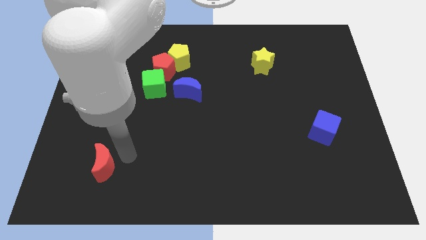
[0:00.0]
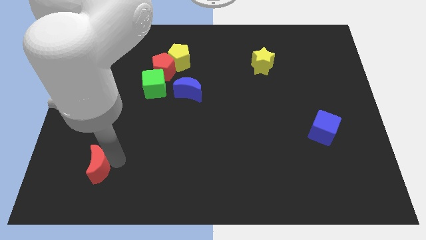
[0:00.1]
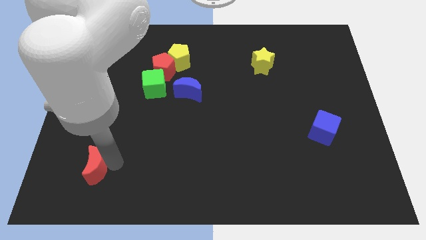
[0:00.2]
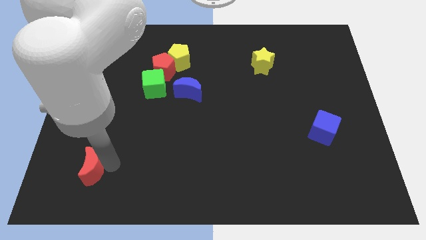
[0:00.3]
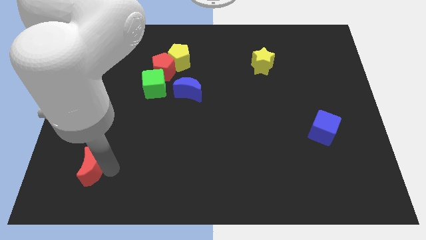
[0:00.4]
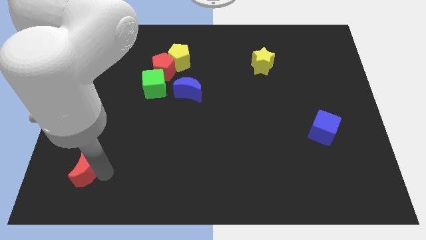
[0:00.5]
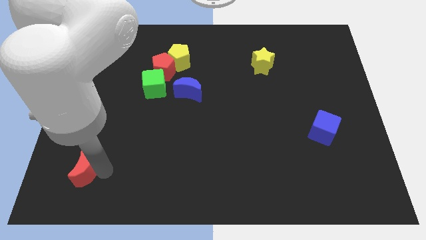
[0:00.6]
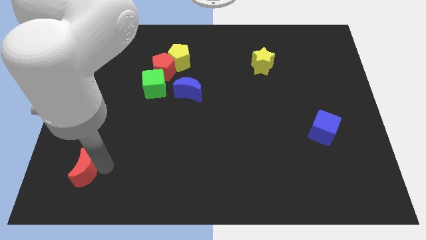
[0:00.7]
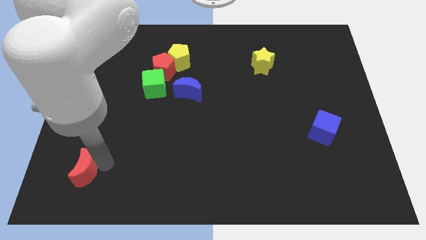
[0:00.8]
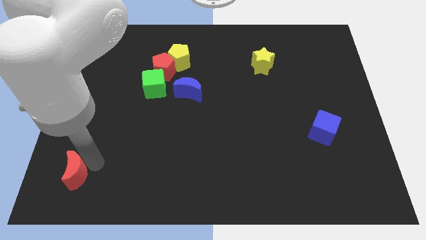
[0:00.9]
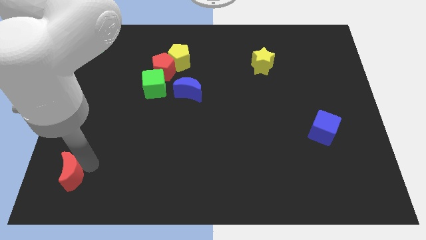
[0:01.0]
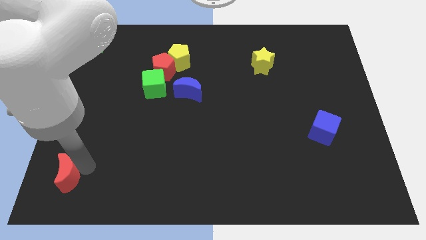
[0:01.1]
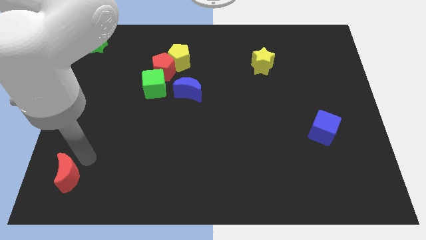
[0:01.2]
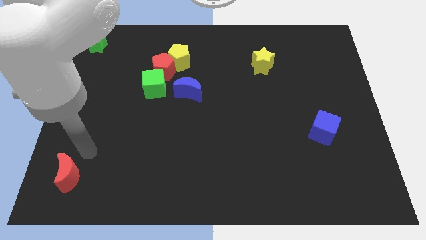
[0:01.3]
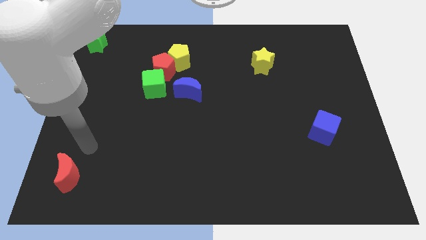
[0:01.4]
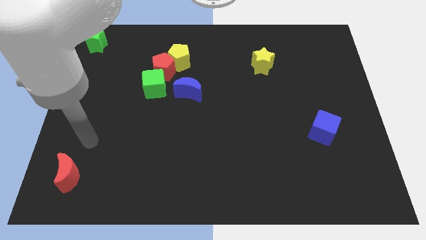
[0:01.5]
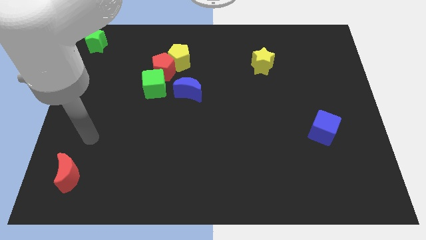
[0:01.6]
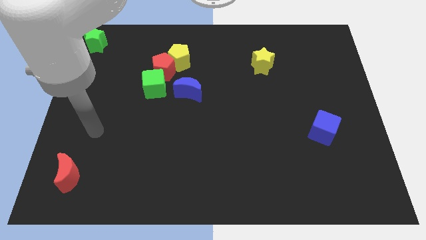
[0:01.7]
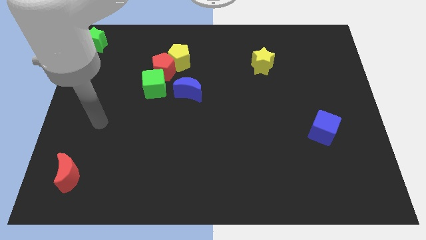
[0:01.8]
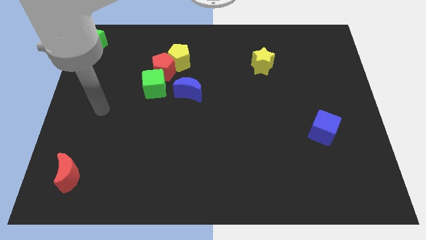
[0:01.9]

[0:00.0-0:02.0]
push the red crescent to the bottom left of the board

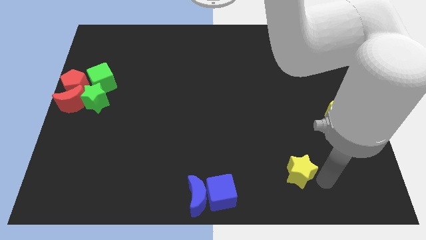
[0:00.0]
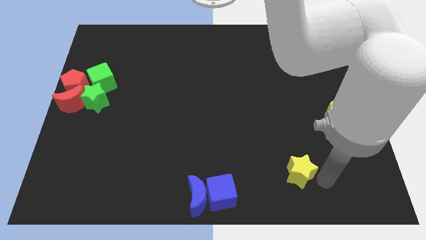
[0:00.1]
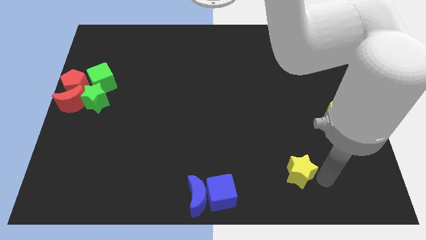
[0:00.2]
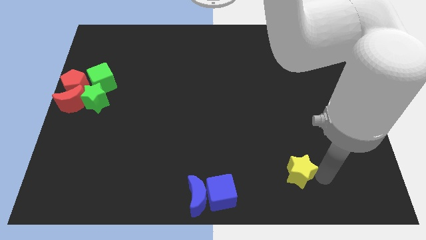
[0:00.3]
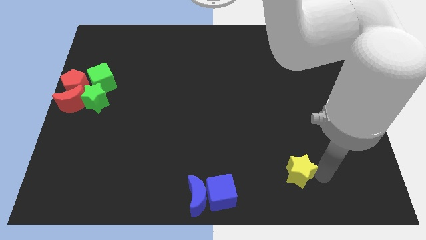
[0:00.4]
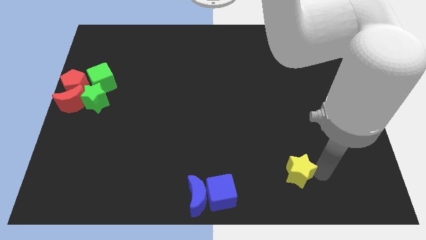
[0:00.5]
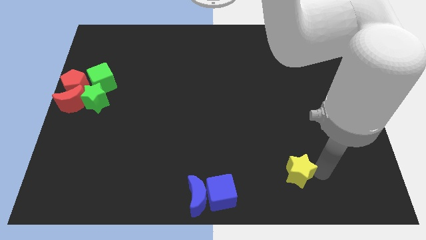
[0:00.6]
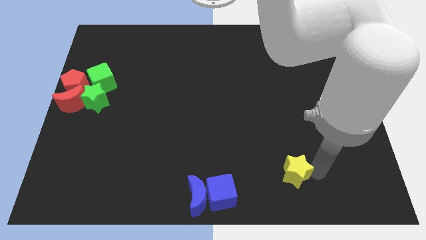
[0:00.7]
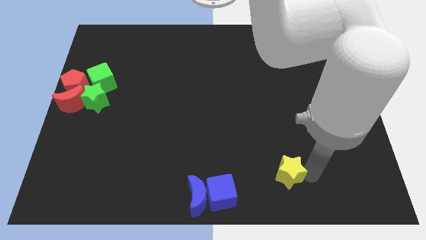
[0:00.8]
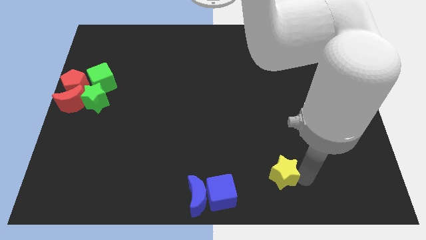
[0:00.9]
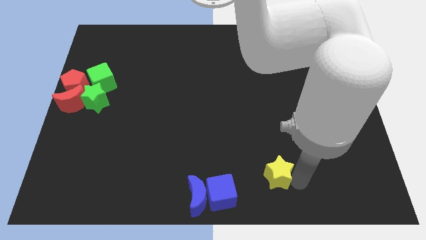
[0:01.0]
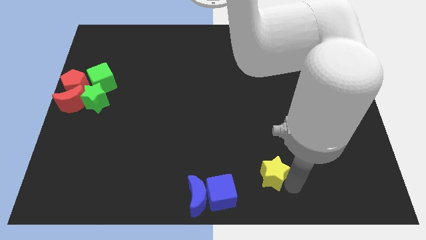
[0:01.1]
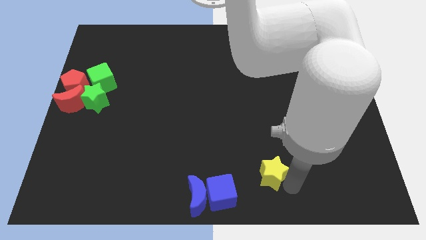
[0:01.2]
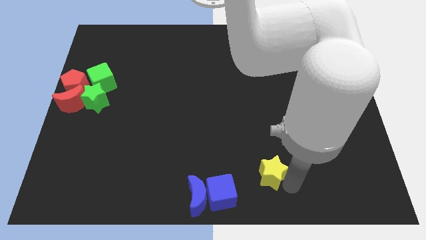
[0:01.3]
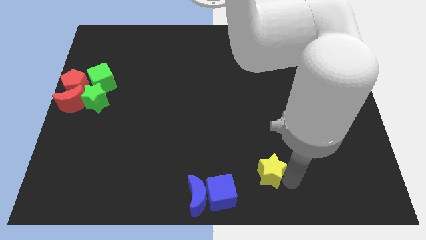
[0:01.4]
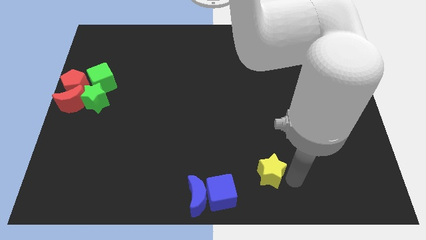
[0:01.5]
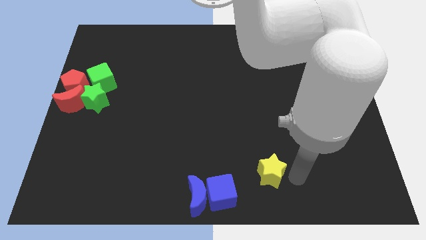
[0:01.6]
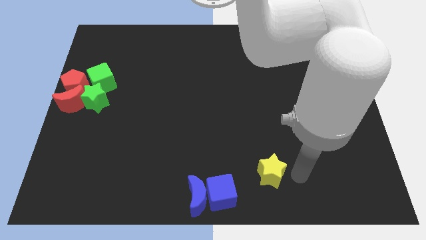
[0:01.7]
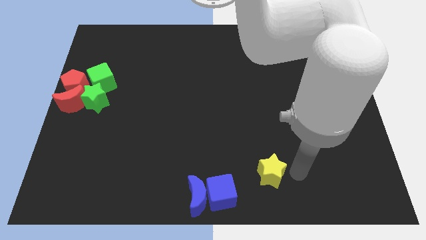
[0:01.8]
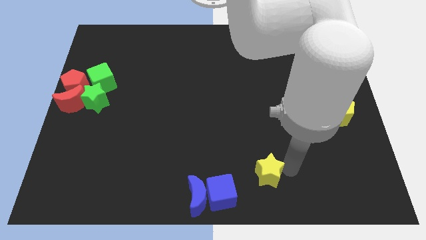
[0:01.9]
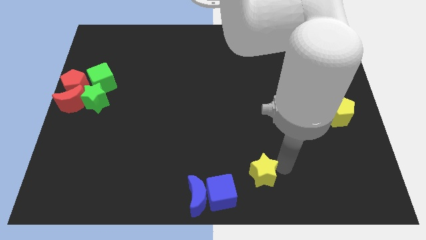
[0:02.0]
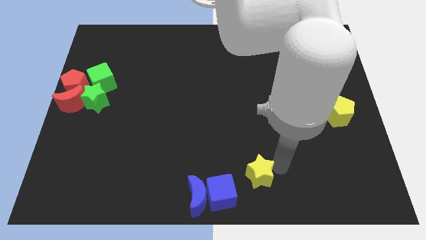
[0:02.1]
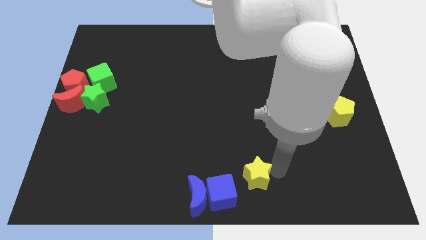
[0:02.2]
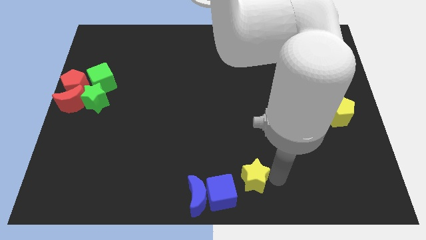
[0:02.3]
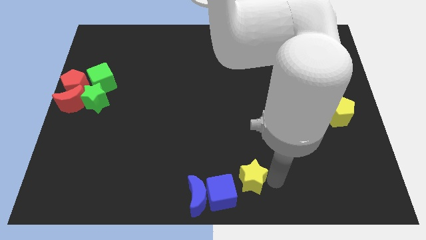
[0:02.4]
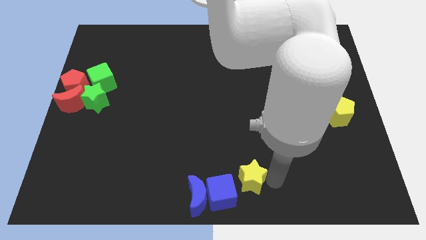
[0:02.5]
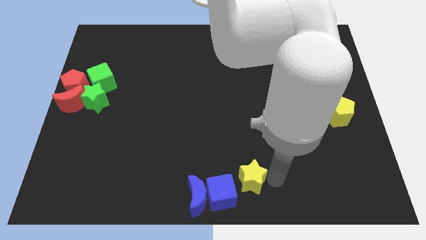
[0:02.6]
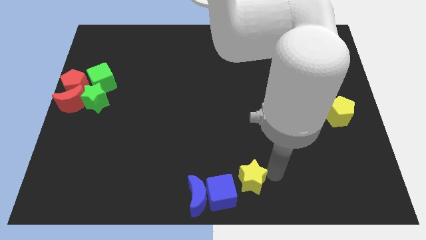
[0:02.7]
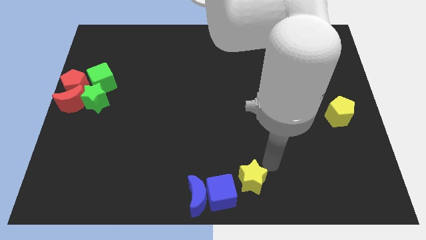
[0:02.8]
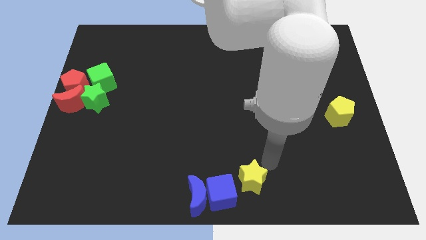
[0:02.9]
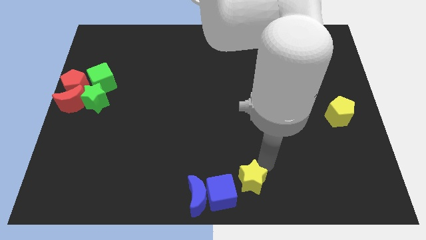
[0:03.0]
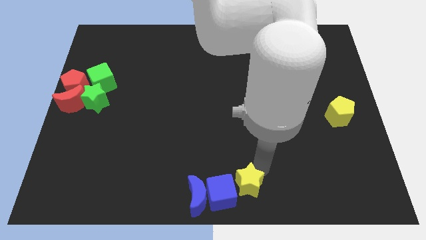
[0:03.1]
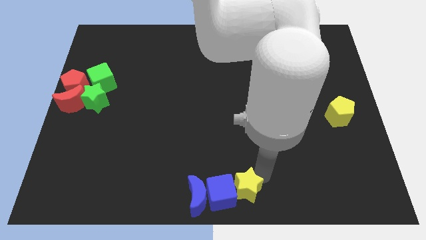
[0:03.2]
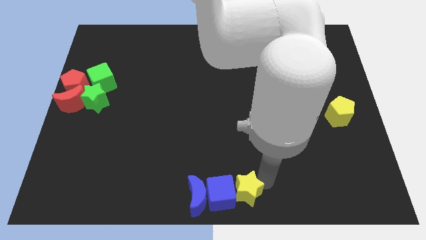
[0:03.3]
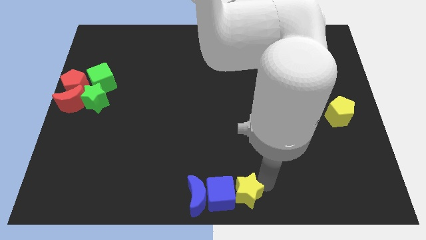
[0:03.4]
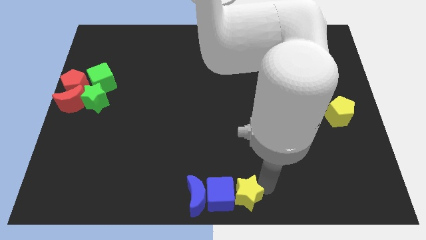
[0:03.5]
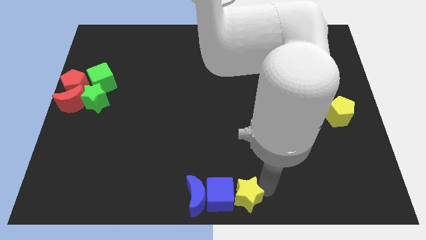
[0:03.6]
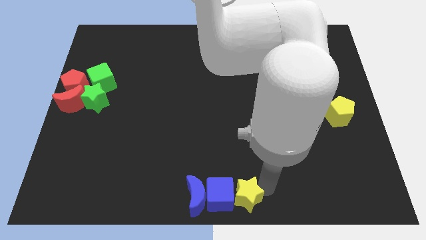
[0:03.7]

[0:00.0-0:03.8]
move the yellow star into the right side of the blue cube

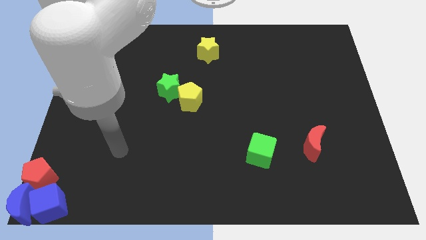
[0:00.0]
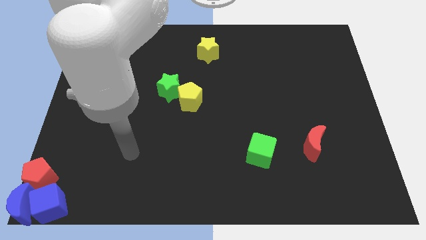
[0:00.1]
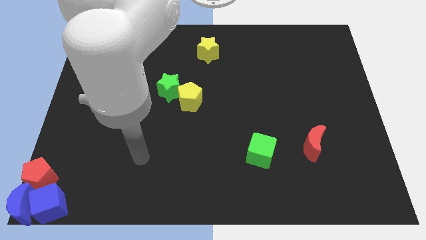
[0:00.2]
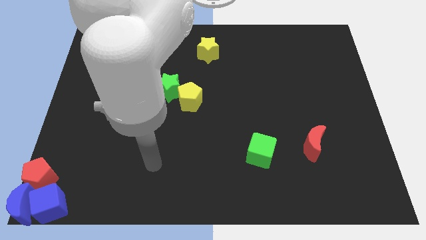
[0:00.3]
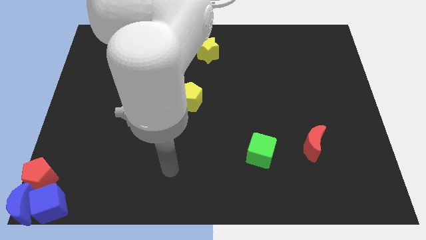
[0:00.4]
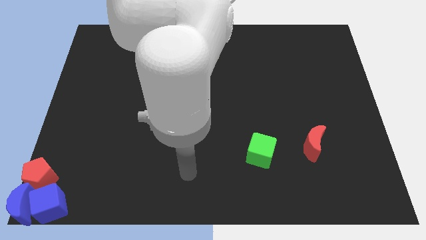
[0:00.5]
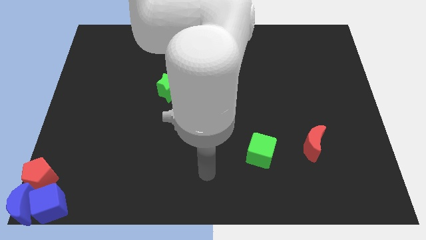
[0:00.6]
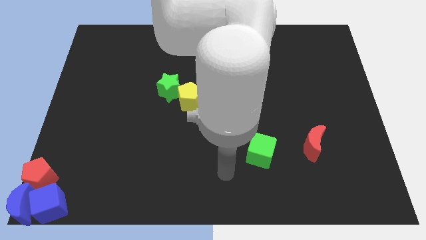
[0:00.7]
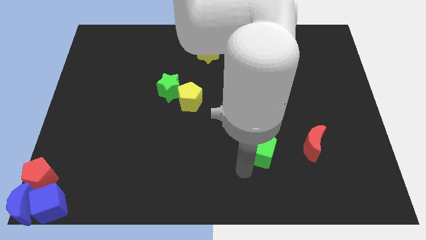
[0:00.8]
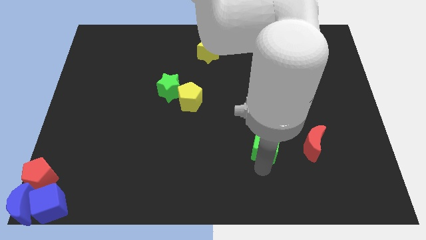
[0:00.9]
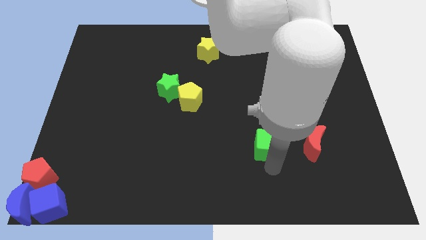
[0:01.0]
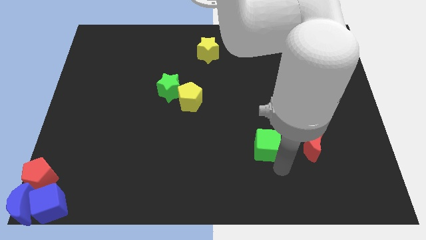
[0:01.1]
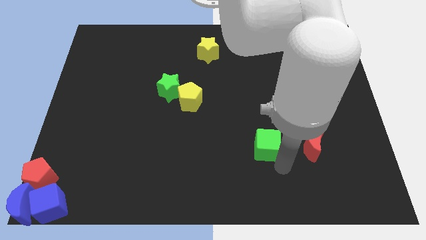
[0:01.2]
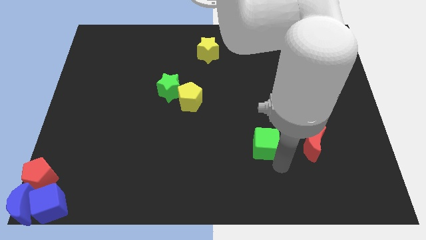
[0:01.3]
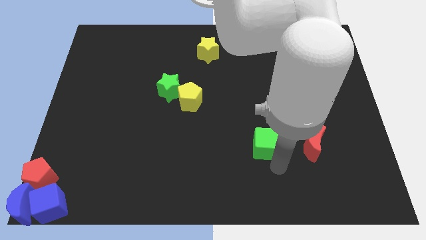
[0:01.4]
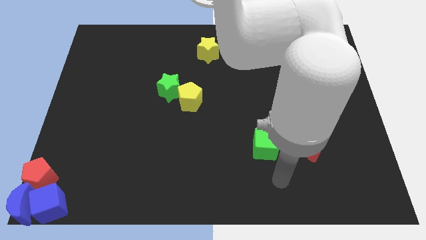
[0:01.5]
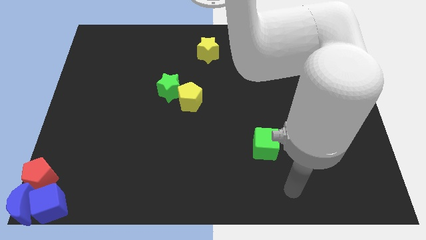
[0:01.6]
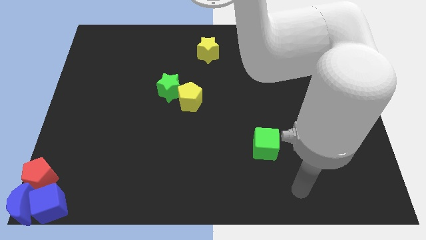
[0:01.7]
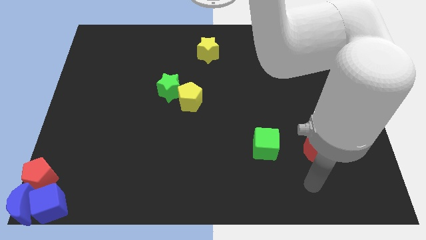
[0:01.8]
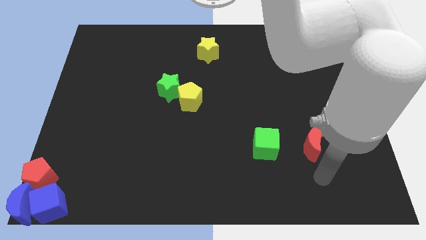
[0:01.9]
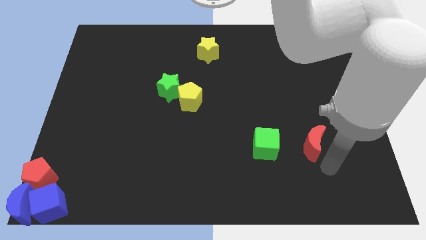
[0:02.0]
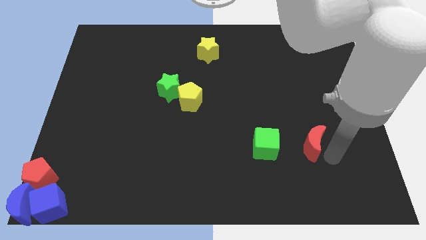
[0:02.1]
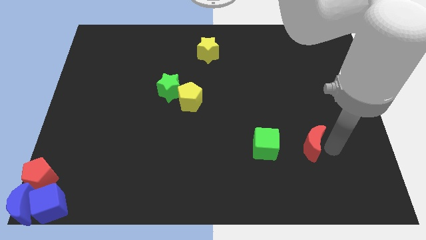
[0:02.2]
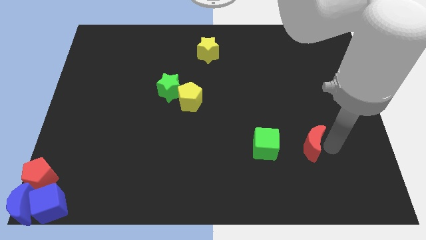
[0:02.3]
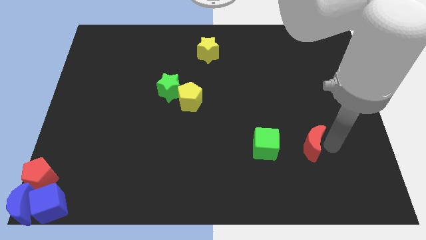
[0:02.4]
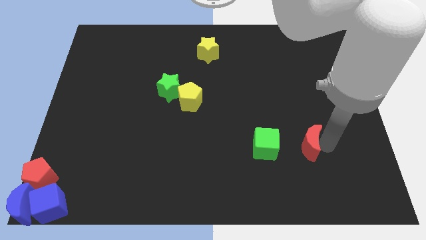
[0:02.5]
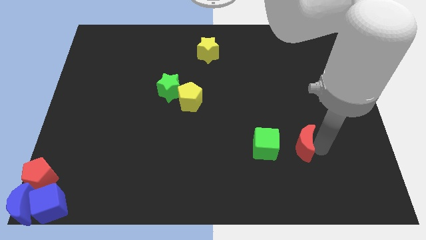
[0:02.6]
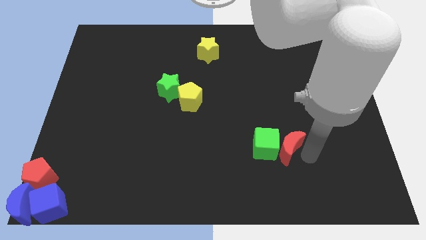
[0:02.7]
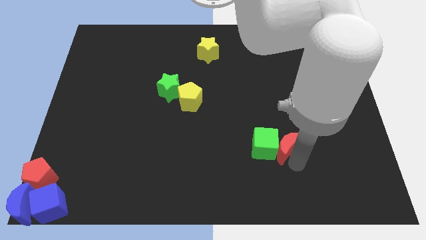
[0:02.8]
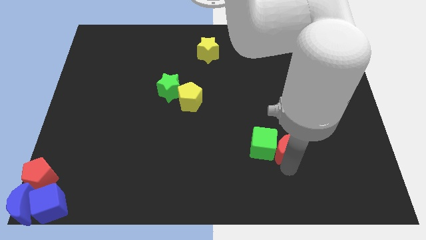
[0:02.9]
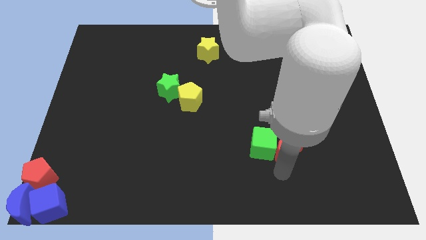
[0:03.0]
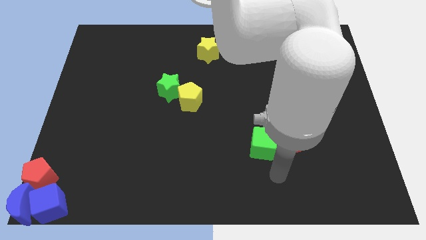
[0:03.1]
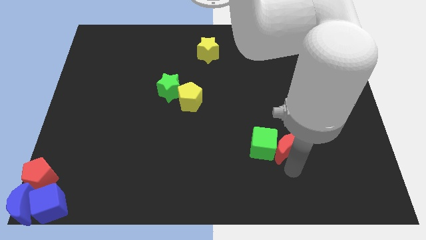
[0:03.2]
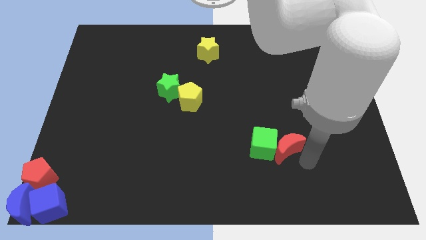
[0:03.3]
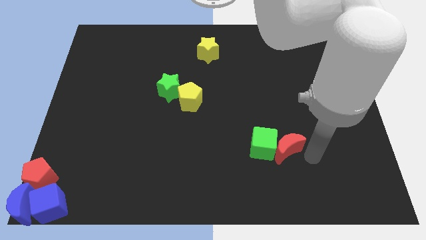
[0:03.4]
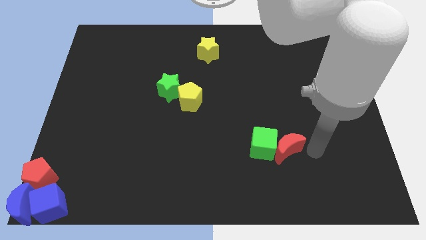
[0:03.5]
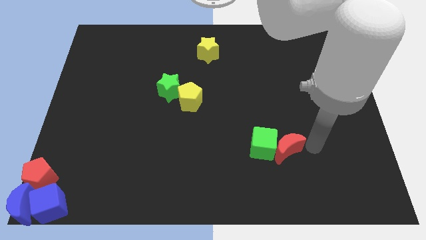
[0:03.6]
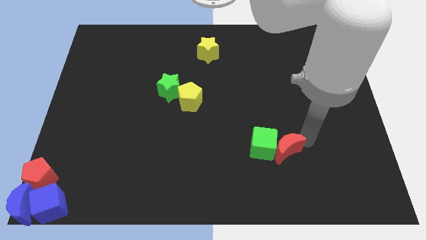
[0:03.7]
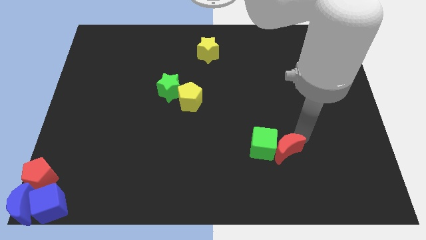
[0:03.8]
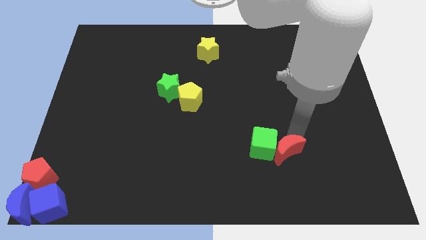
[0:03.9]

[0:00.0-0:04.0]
place the red crescent right to the green cube
